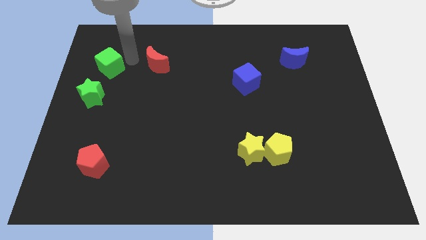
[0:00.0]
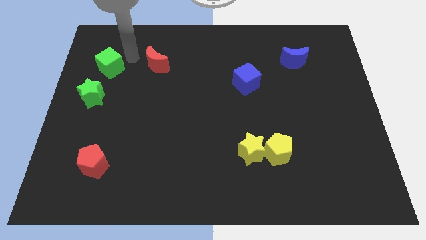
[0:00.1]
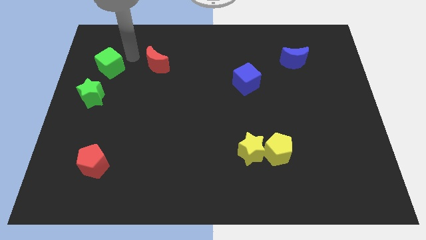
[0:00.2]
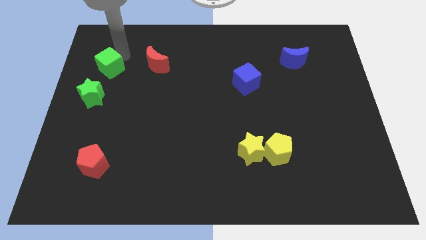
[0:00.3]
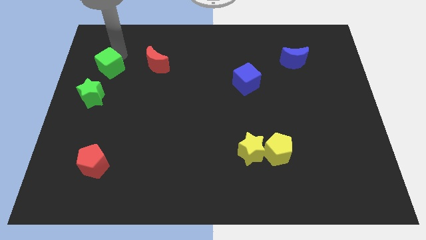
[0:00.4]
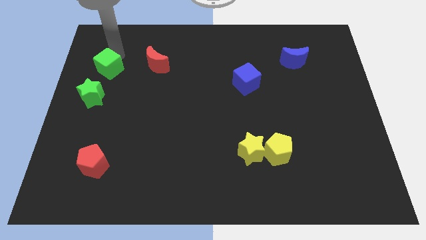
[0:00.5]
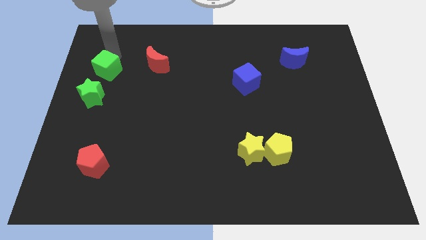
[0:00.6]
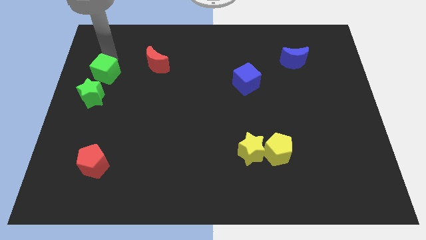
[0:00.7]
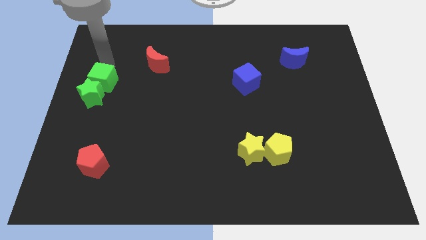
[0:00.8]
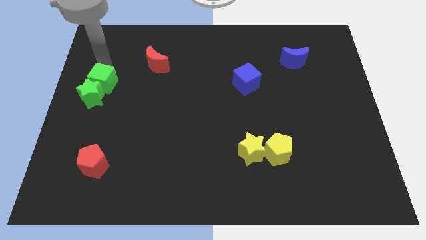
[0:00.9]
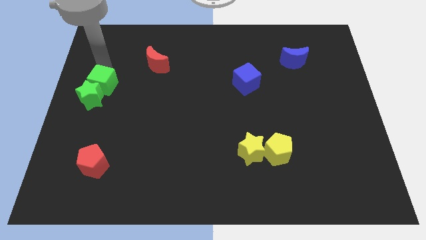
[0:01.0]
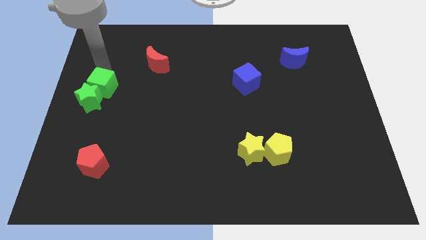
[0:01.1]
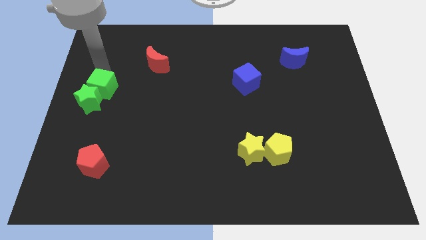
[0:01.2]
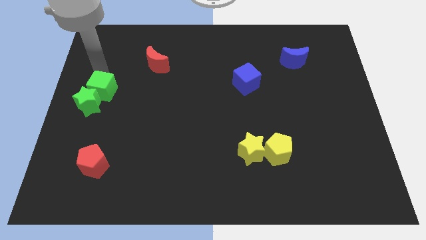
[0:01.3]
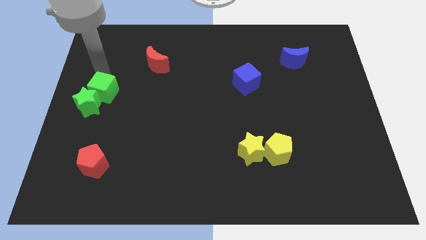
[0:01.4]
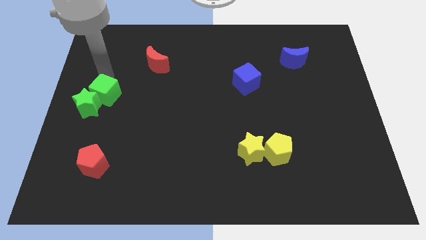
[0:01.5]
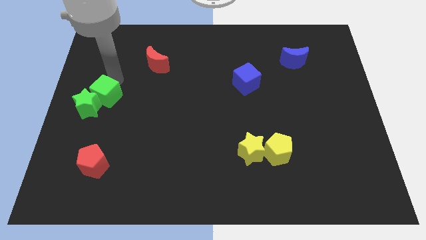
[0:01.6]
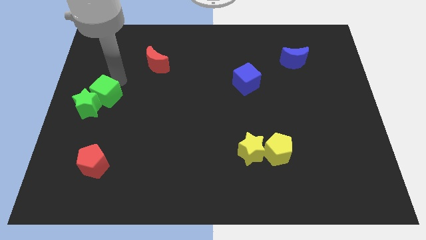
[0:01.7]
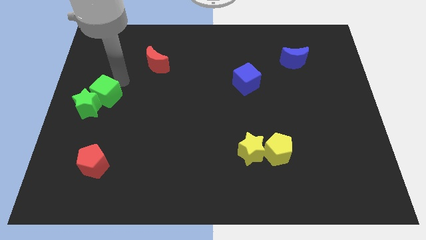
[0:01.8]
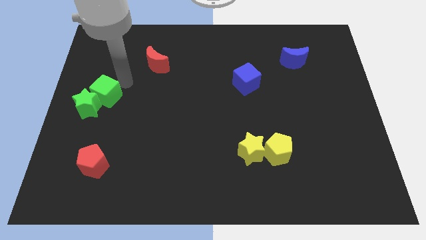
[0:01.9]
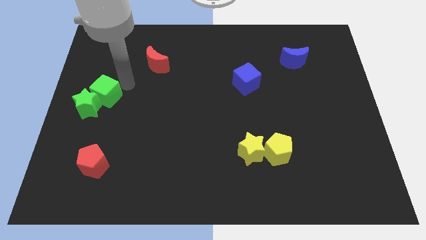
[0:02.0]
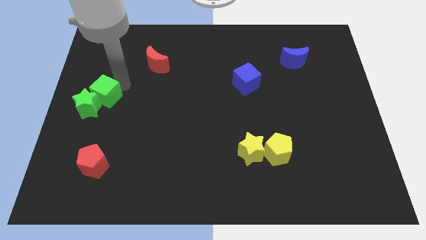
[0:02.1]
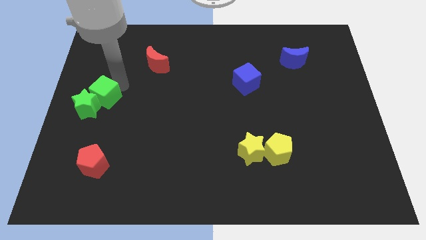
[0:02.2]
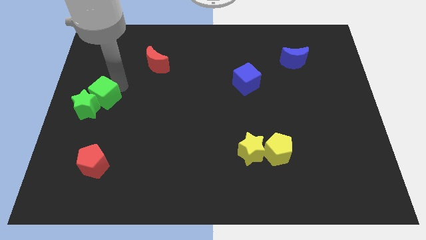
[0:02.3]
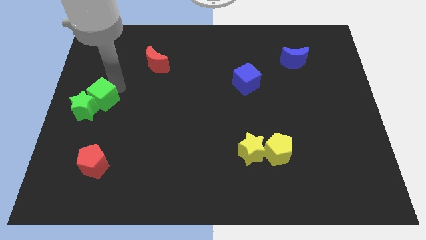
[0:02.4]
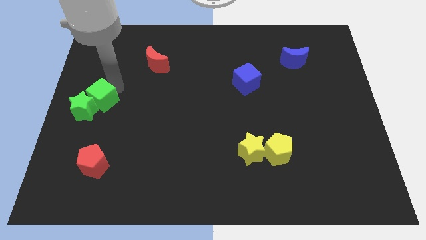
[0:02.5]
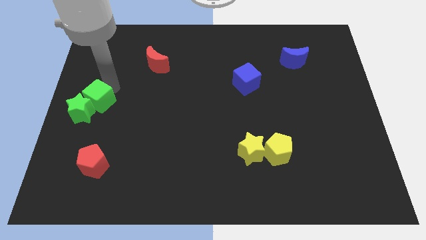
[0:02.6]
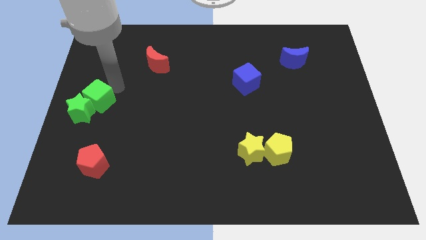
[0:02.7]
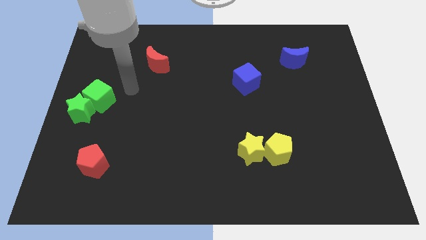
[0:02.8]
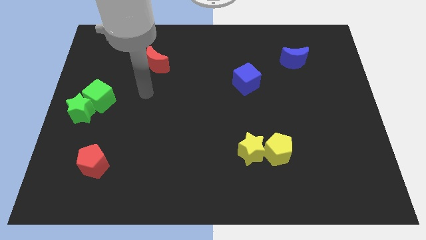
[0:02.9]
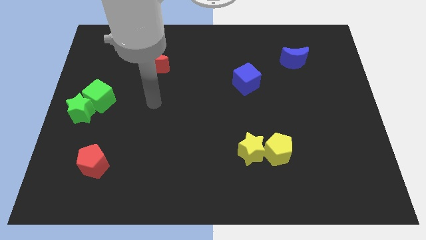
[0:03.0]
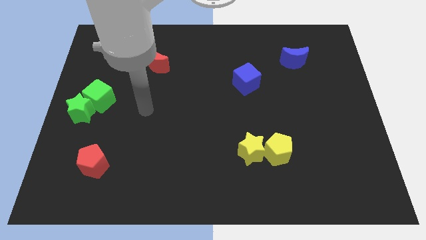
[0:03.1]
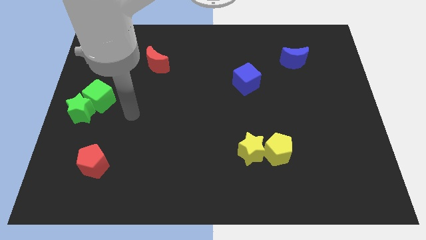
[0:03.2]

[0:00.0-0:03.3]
push the green cube into the green star

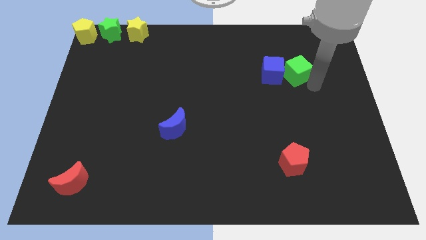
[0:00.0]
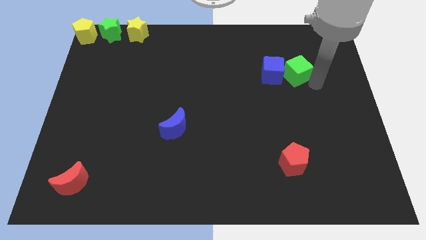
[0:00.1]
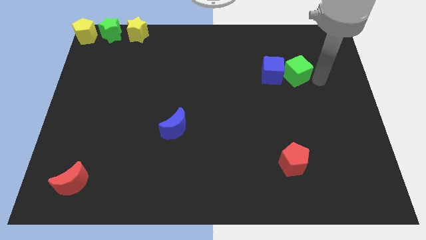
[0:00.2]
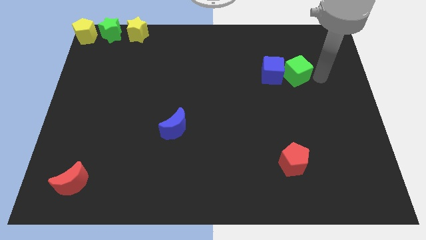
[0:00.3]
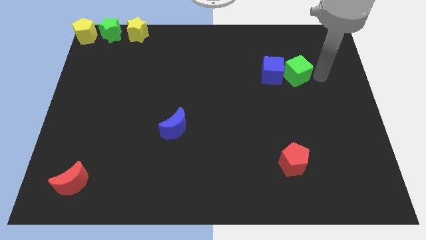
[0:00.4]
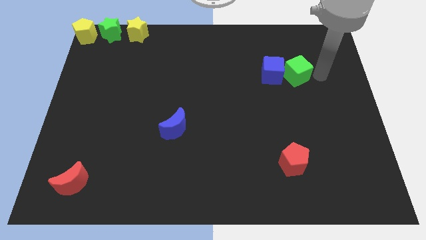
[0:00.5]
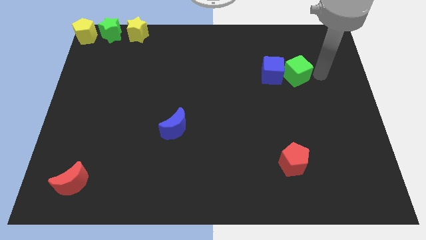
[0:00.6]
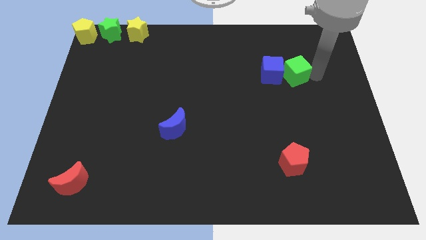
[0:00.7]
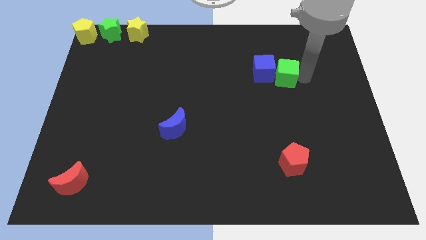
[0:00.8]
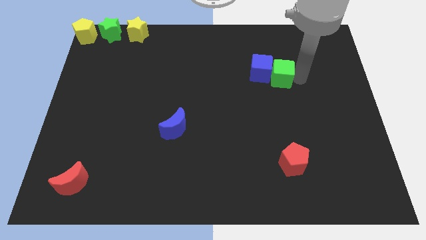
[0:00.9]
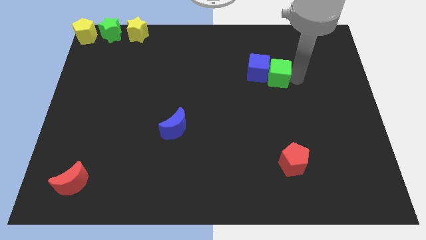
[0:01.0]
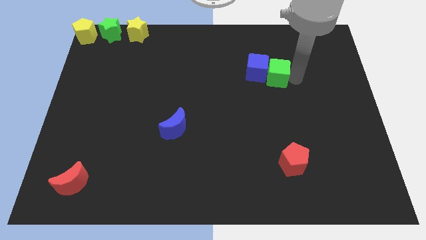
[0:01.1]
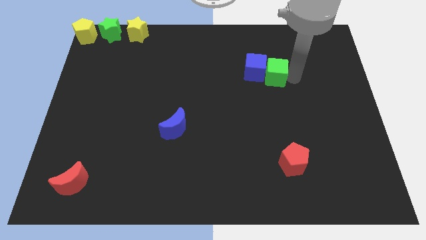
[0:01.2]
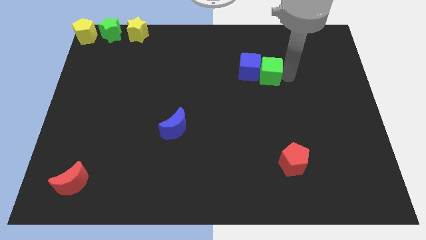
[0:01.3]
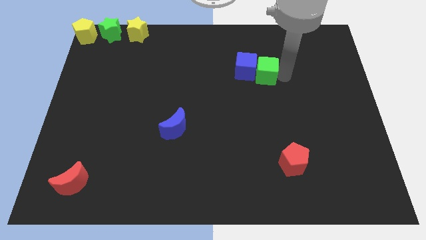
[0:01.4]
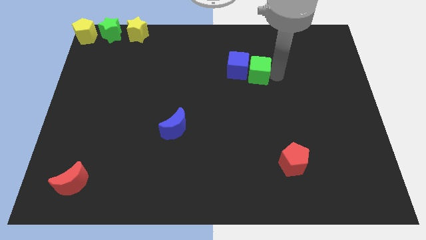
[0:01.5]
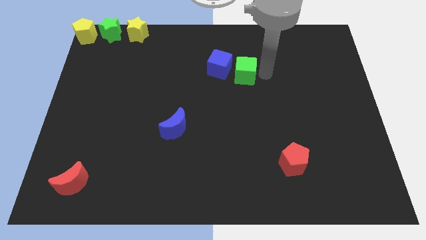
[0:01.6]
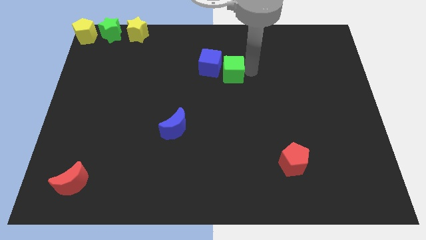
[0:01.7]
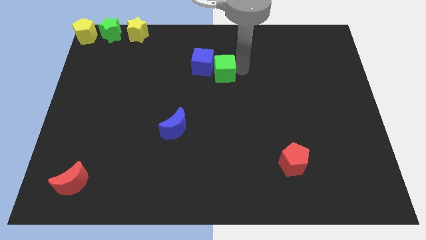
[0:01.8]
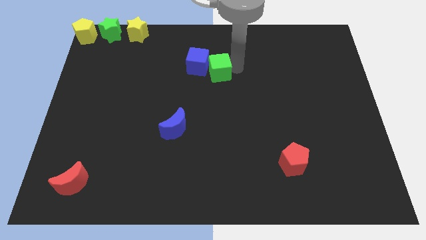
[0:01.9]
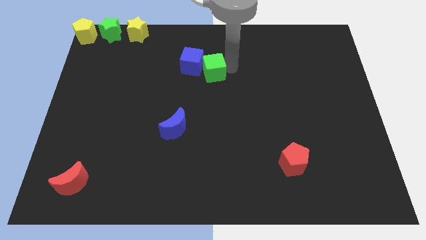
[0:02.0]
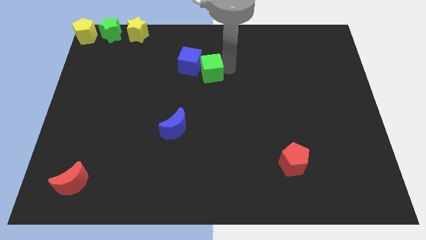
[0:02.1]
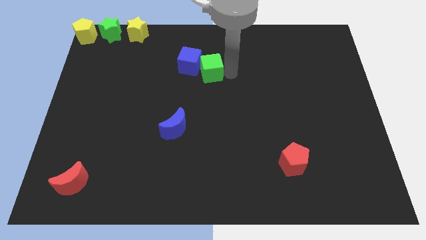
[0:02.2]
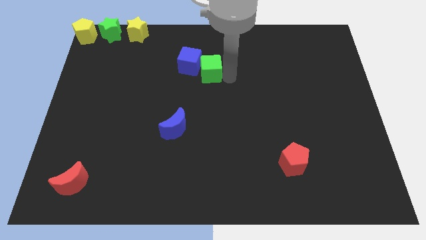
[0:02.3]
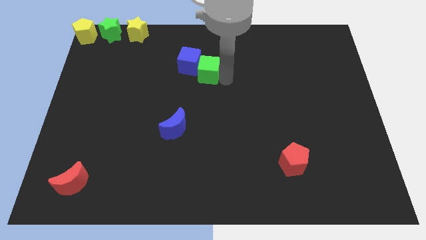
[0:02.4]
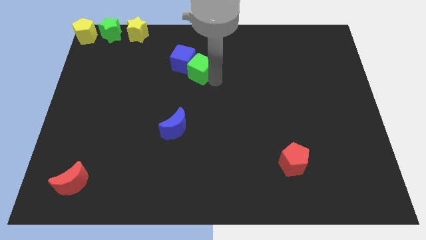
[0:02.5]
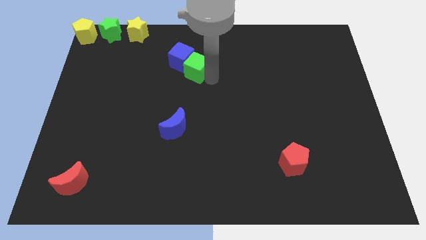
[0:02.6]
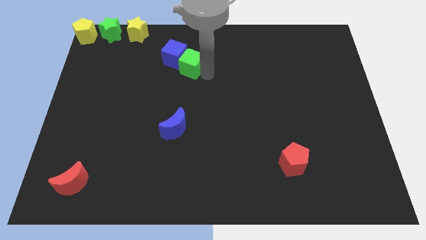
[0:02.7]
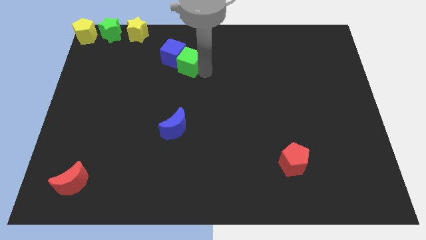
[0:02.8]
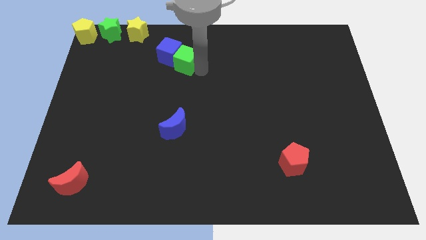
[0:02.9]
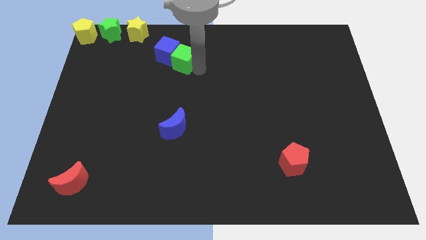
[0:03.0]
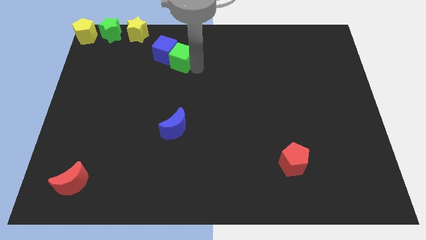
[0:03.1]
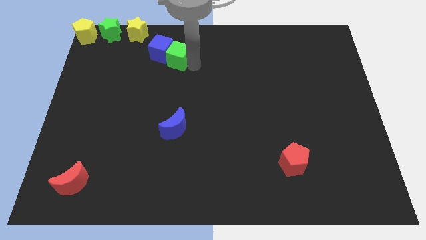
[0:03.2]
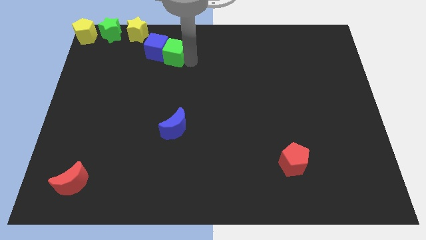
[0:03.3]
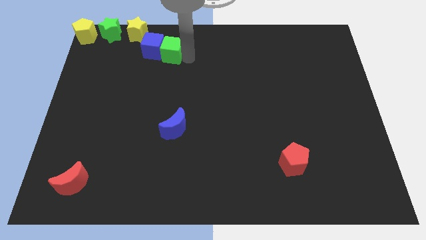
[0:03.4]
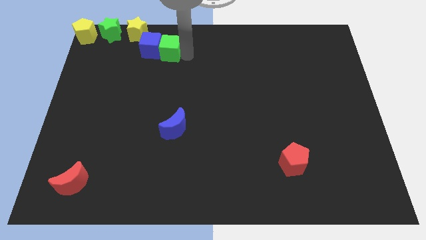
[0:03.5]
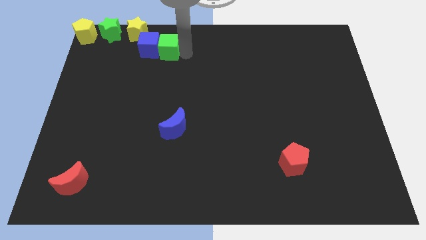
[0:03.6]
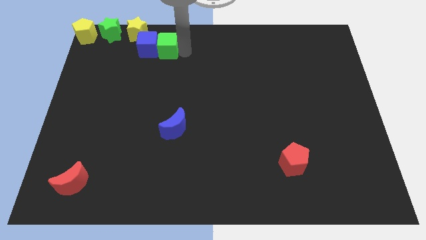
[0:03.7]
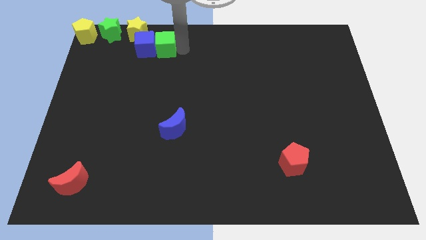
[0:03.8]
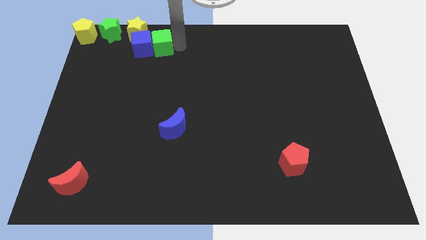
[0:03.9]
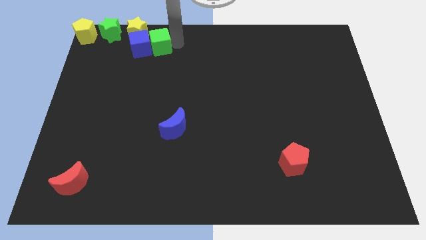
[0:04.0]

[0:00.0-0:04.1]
push the green cube along with blue cube to the bottom of the yellow star

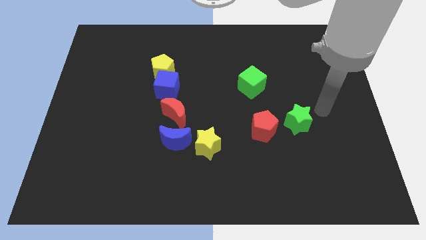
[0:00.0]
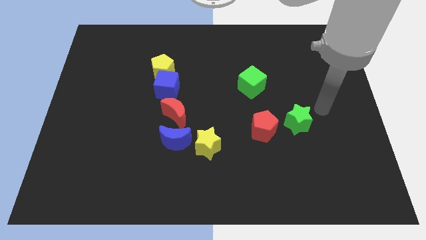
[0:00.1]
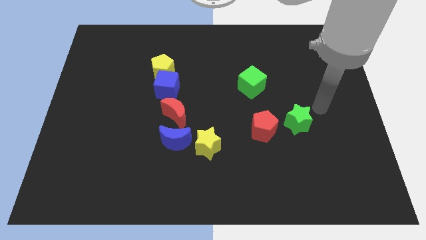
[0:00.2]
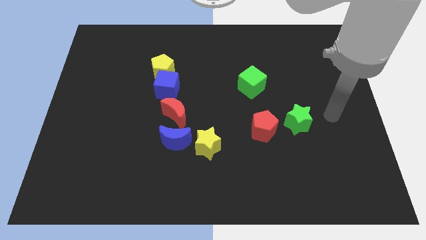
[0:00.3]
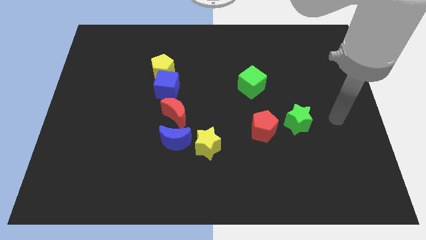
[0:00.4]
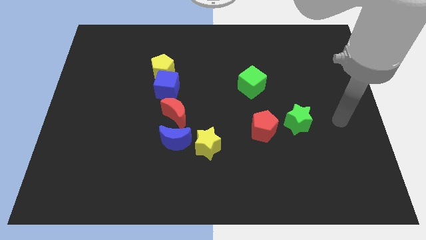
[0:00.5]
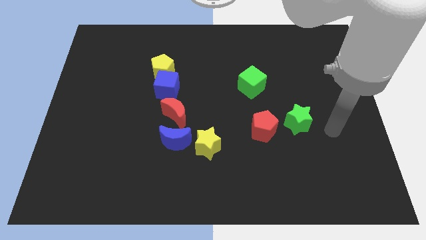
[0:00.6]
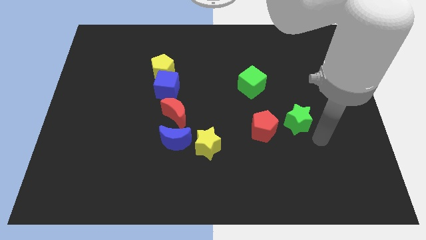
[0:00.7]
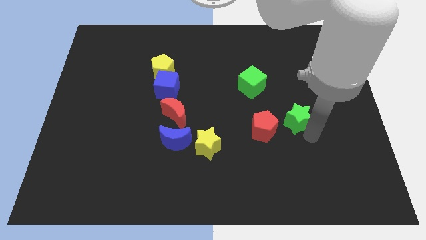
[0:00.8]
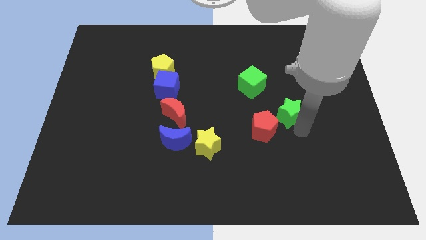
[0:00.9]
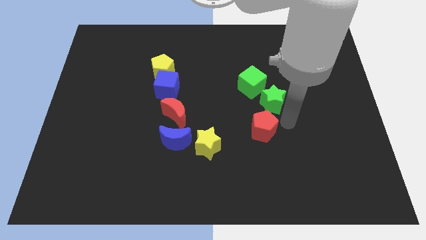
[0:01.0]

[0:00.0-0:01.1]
push the green star close to the green cube

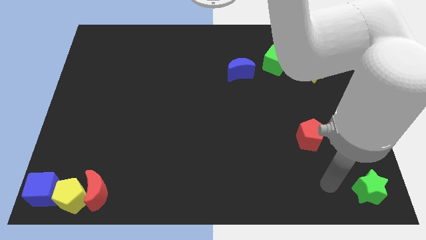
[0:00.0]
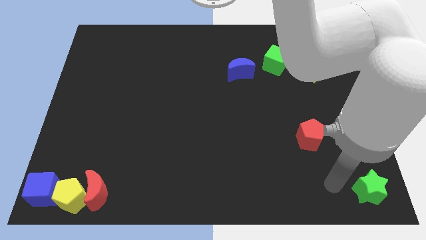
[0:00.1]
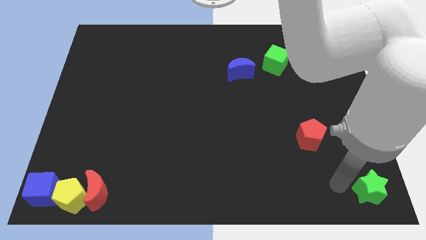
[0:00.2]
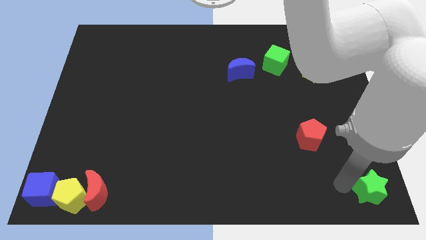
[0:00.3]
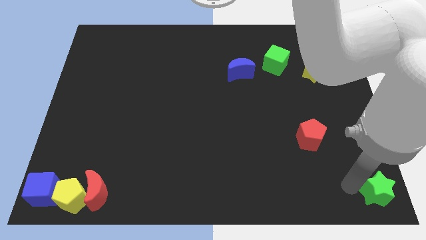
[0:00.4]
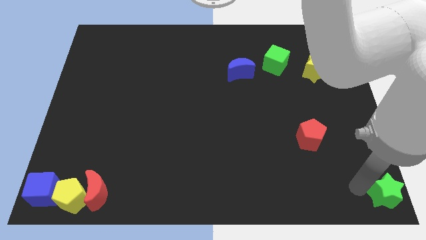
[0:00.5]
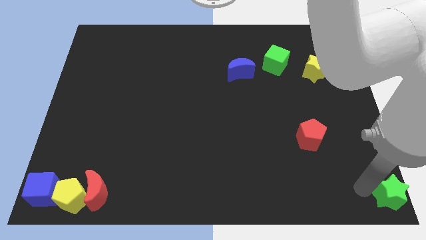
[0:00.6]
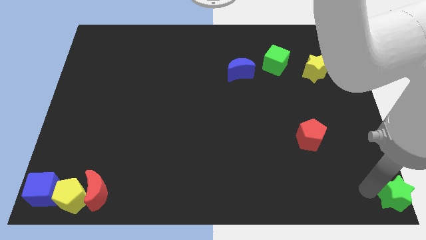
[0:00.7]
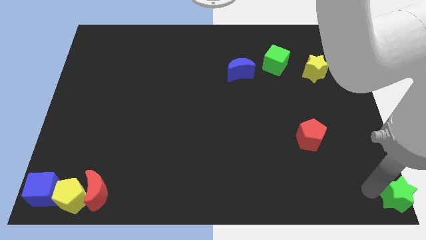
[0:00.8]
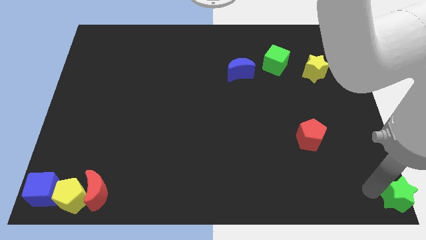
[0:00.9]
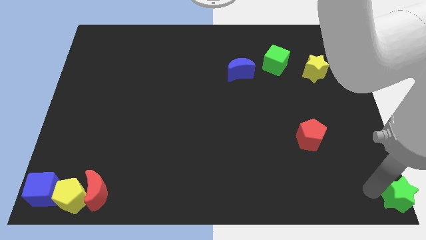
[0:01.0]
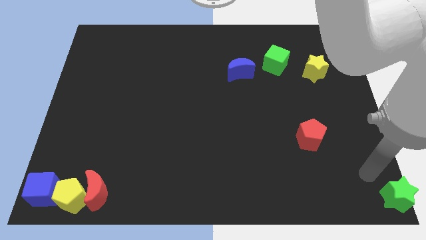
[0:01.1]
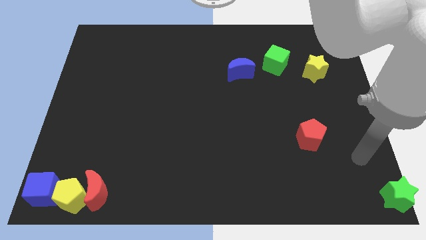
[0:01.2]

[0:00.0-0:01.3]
move the green star towards the bottom right corner of the board
